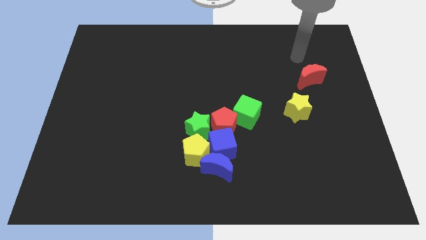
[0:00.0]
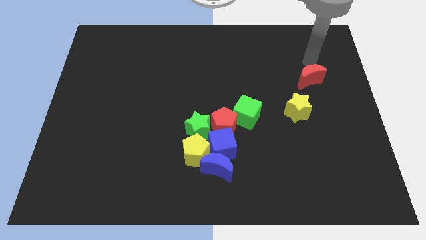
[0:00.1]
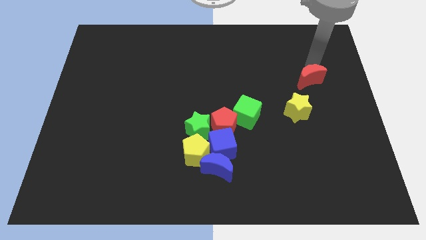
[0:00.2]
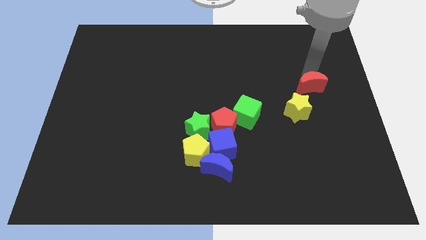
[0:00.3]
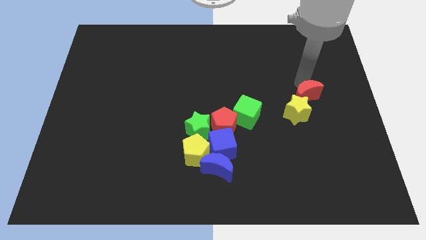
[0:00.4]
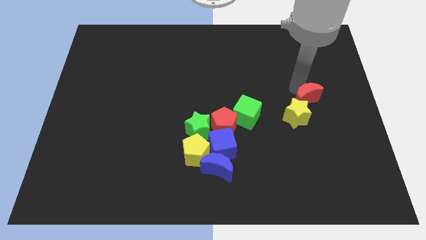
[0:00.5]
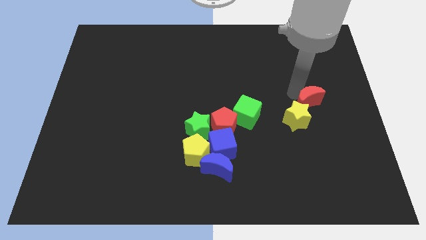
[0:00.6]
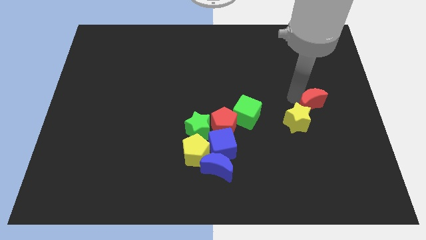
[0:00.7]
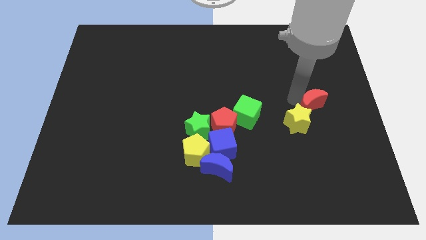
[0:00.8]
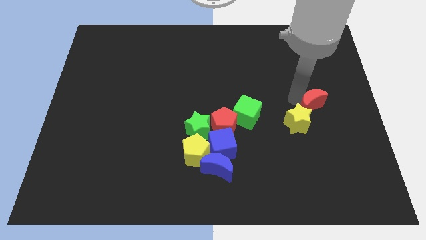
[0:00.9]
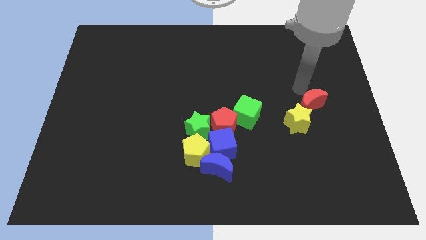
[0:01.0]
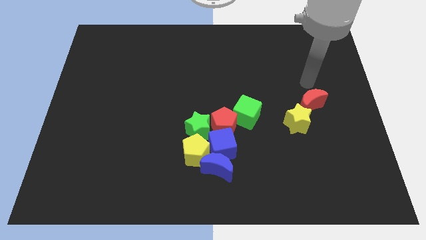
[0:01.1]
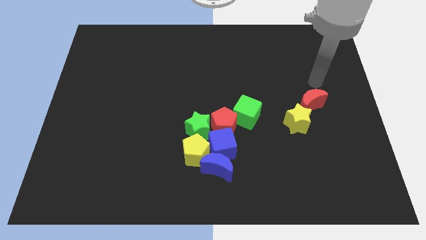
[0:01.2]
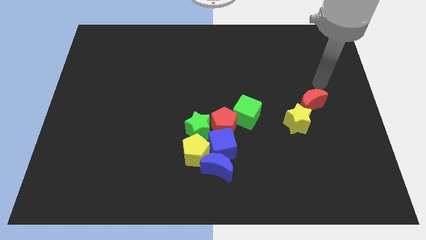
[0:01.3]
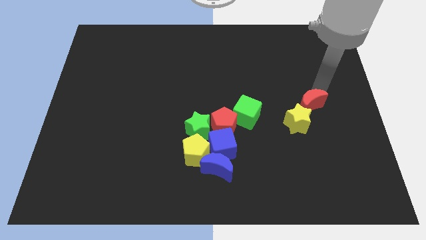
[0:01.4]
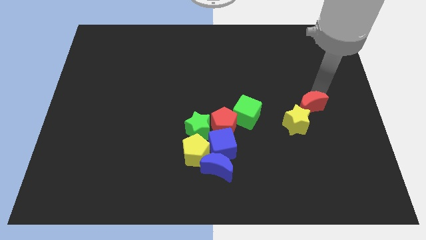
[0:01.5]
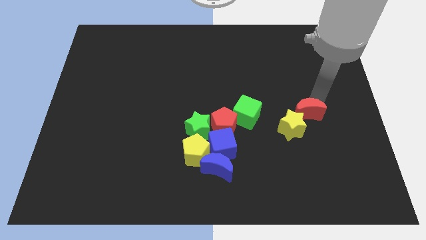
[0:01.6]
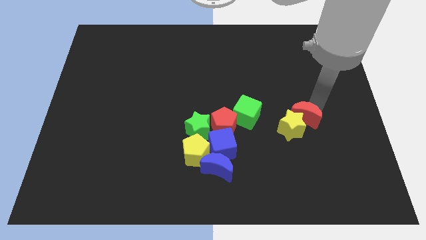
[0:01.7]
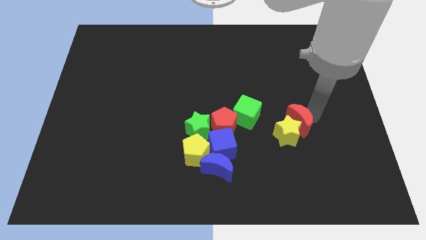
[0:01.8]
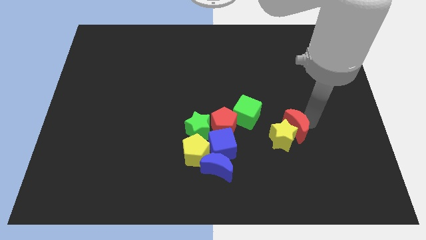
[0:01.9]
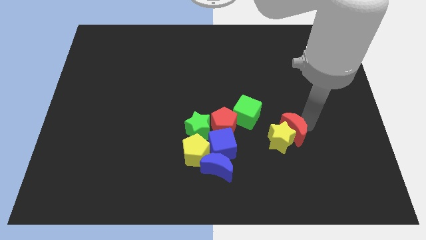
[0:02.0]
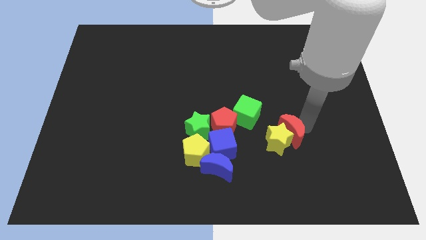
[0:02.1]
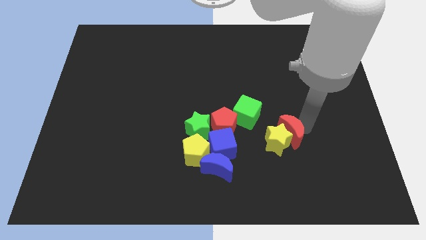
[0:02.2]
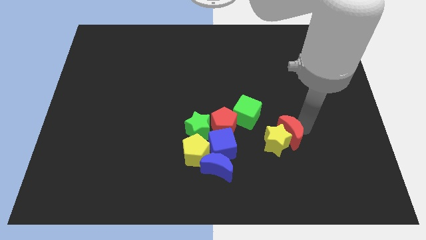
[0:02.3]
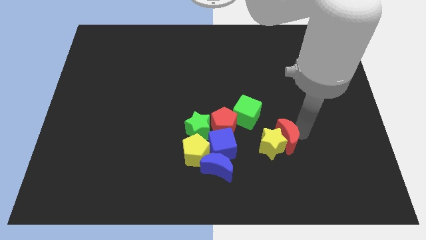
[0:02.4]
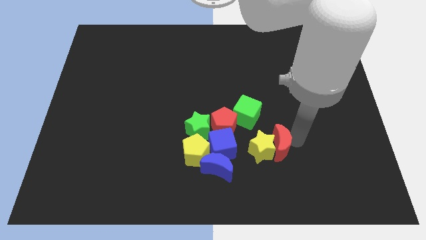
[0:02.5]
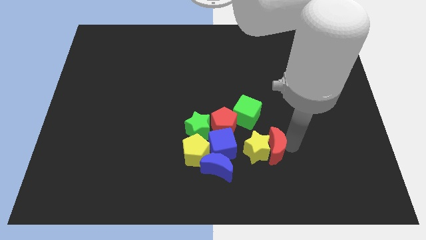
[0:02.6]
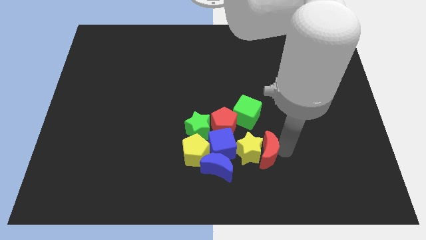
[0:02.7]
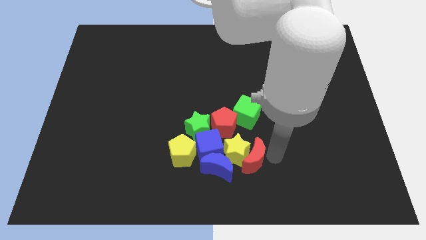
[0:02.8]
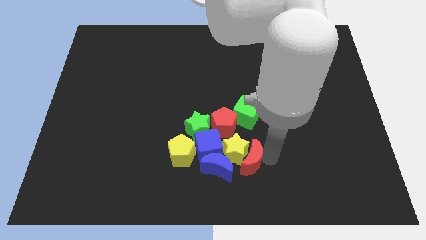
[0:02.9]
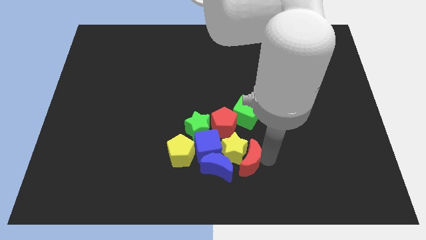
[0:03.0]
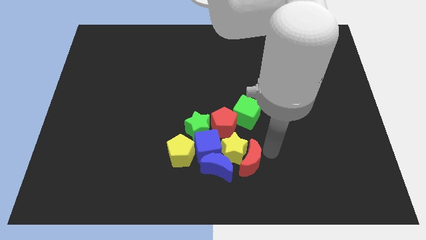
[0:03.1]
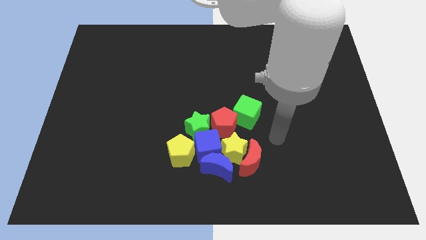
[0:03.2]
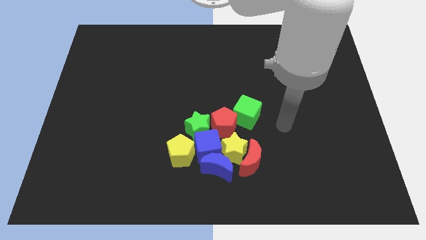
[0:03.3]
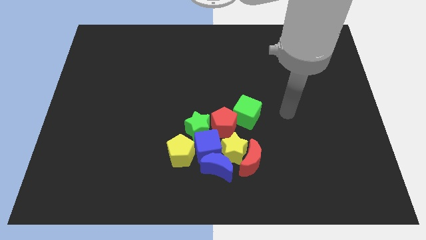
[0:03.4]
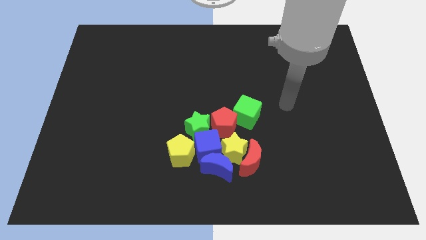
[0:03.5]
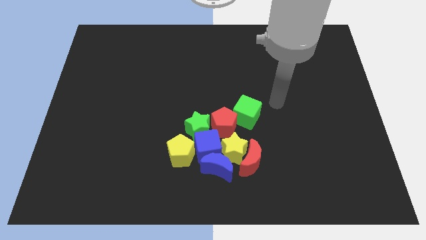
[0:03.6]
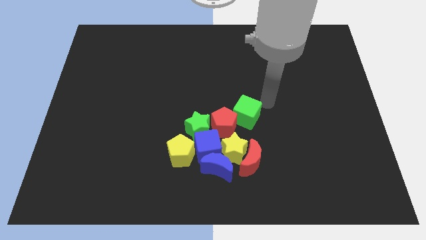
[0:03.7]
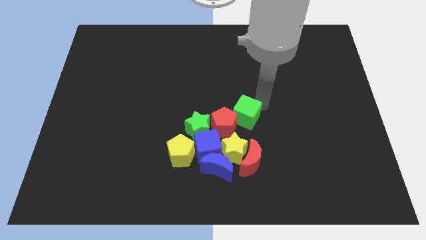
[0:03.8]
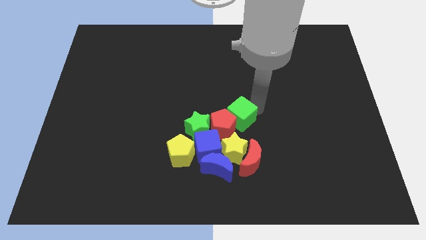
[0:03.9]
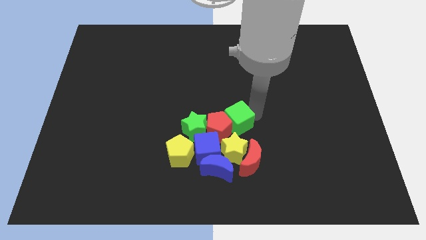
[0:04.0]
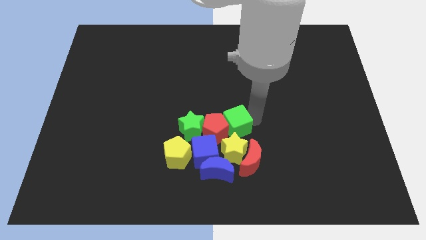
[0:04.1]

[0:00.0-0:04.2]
move the yellow star into the blue cube

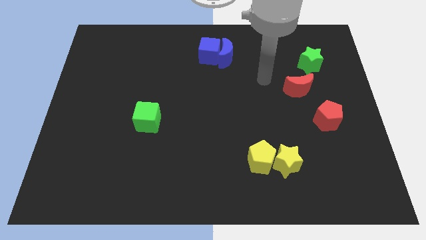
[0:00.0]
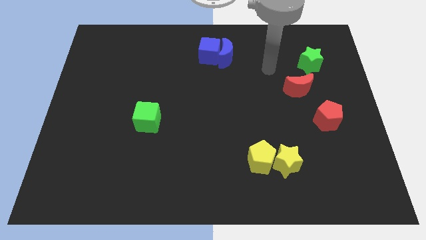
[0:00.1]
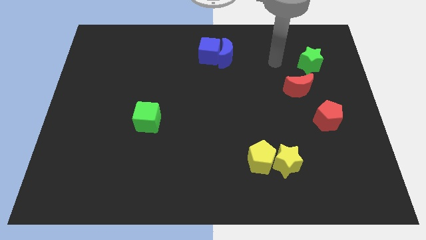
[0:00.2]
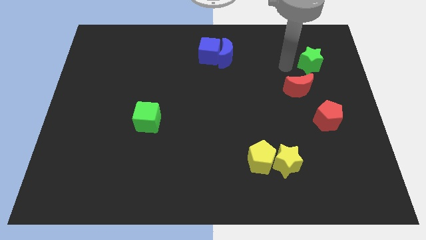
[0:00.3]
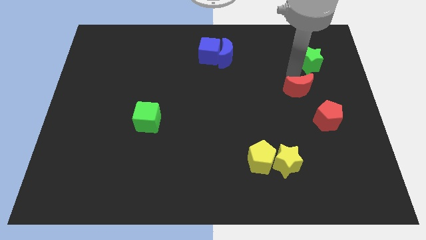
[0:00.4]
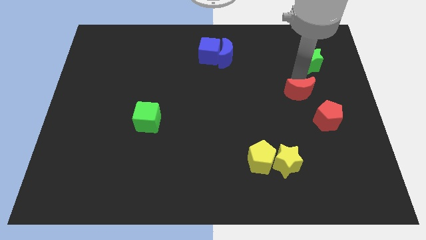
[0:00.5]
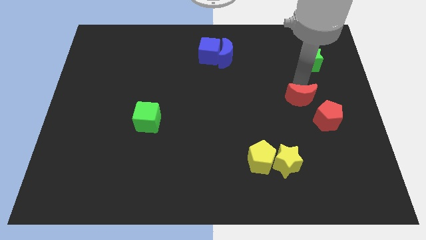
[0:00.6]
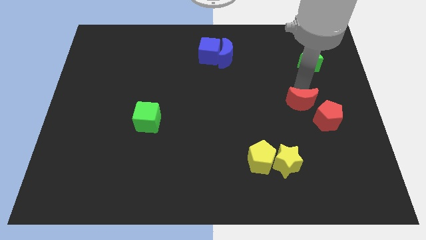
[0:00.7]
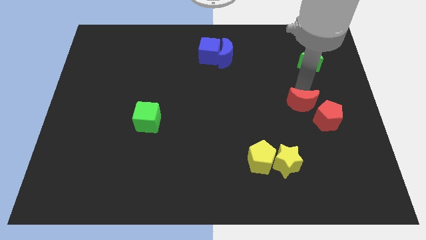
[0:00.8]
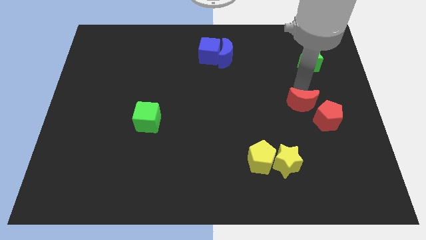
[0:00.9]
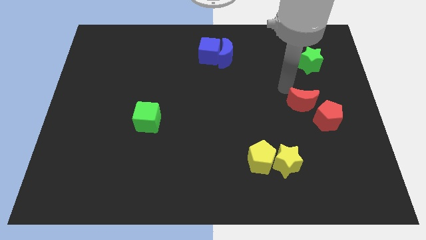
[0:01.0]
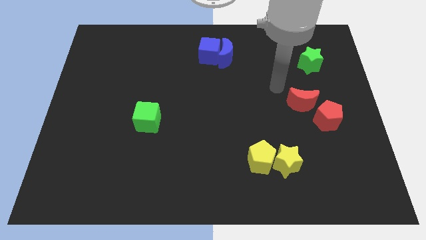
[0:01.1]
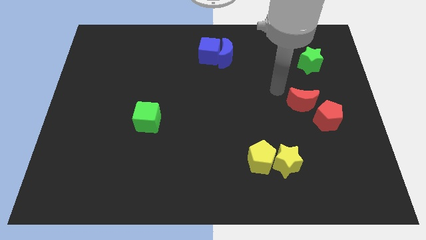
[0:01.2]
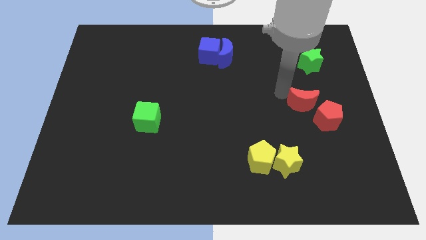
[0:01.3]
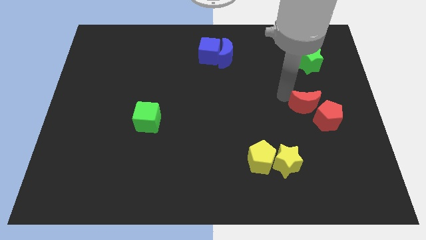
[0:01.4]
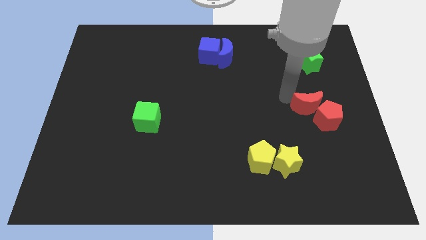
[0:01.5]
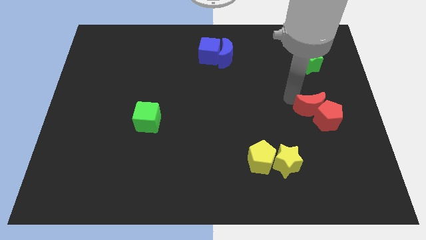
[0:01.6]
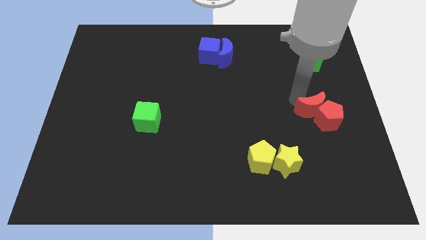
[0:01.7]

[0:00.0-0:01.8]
push the red crescent diagonally to the top left of the red pentagon

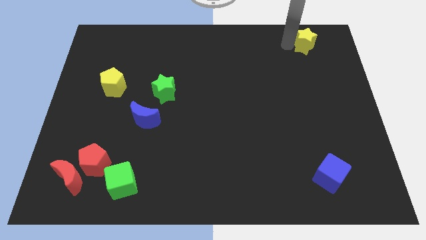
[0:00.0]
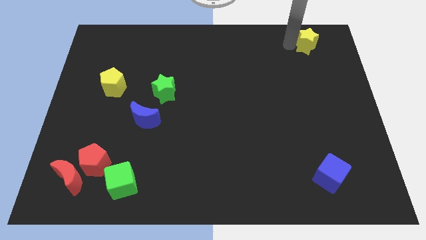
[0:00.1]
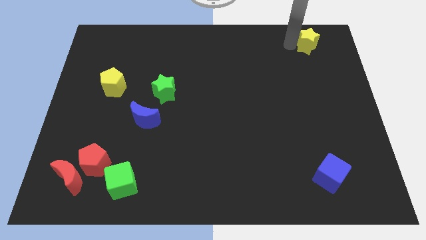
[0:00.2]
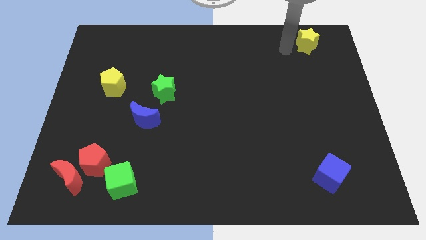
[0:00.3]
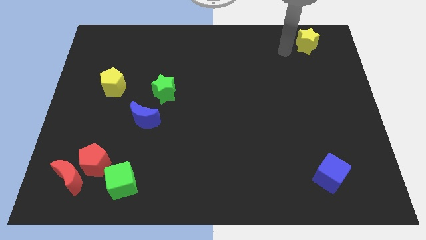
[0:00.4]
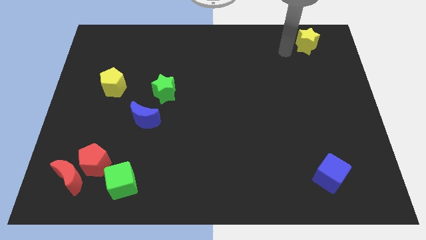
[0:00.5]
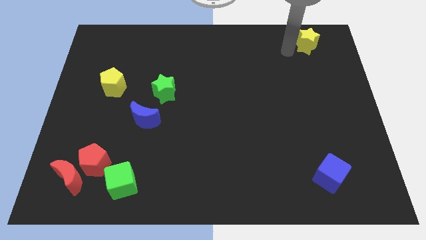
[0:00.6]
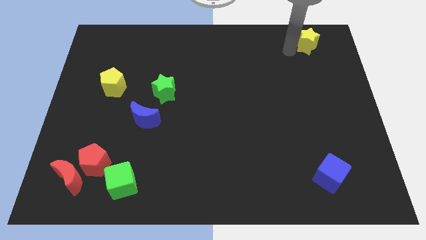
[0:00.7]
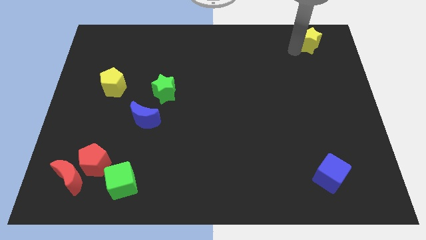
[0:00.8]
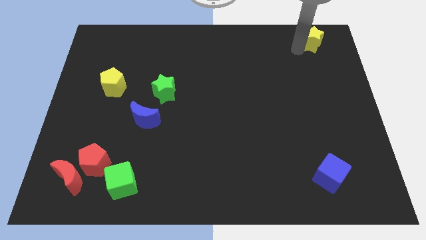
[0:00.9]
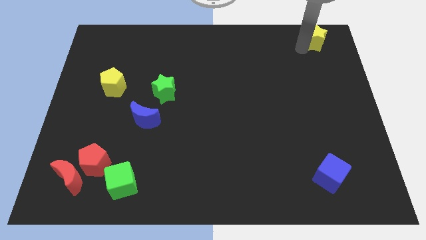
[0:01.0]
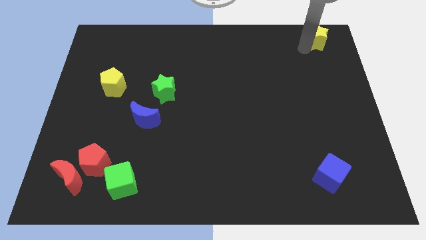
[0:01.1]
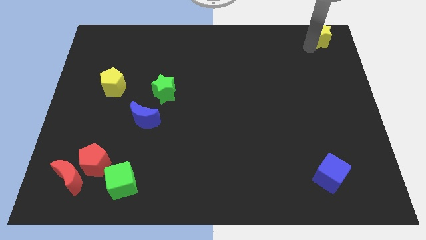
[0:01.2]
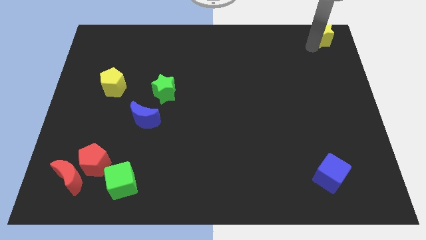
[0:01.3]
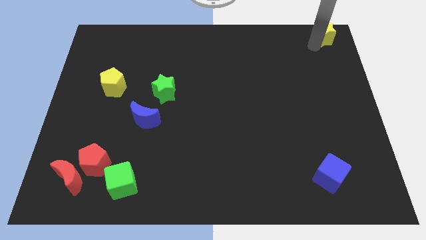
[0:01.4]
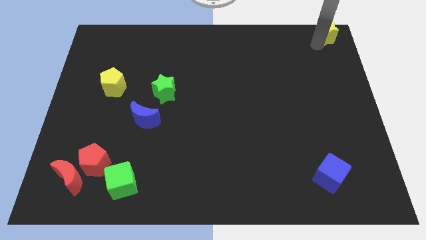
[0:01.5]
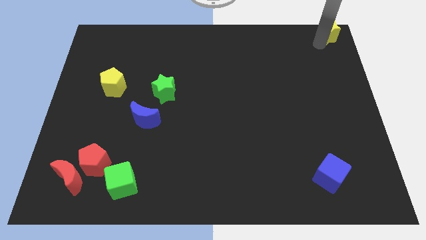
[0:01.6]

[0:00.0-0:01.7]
place the yellow star at the top right corner

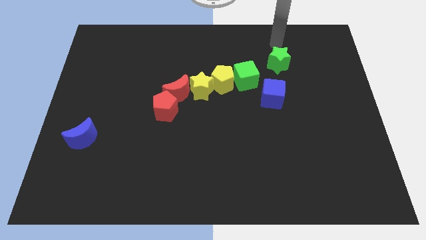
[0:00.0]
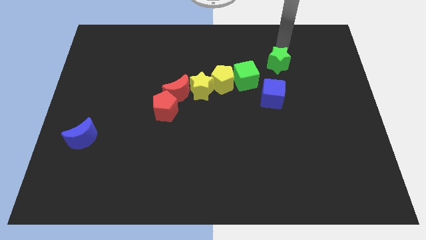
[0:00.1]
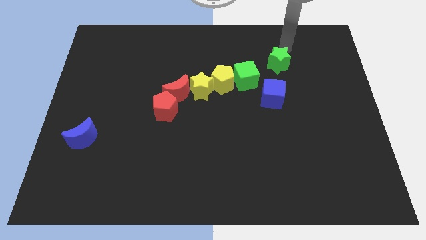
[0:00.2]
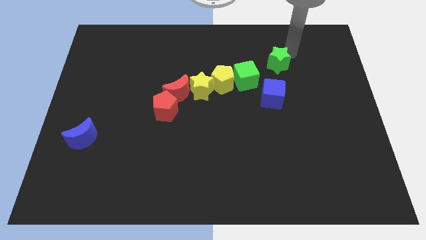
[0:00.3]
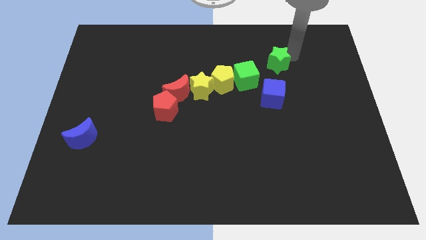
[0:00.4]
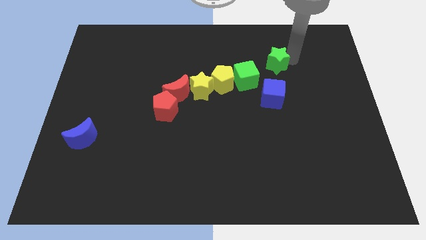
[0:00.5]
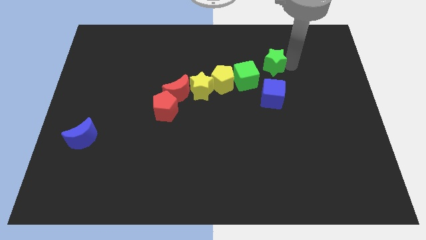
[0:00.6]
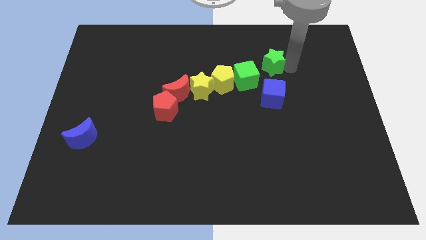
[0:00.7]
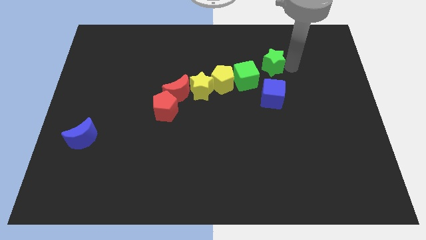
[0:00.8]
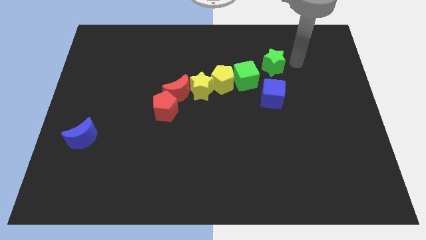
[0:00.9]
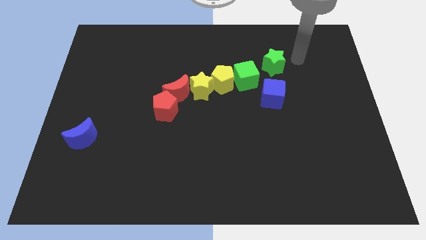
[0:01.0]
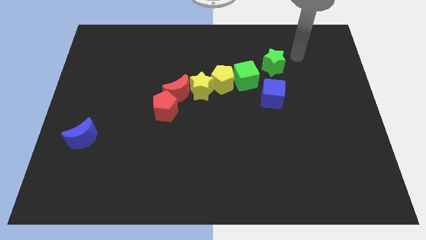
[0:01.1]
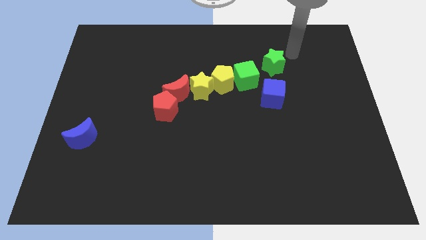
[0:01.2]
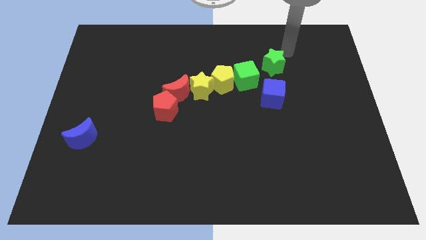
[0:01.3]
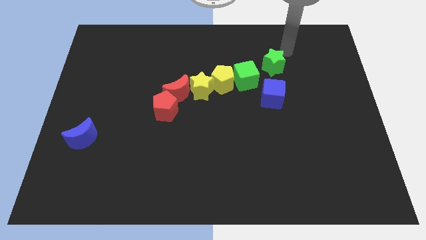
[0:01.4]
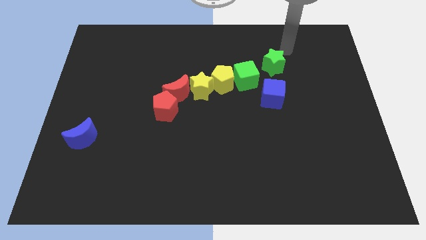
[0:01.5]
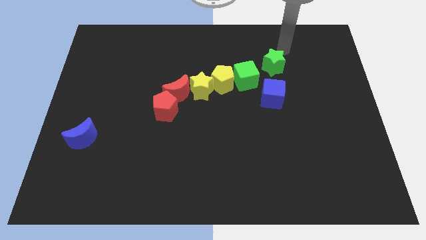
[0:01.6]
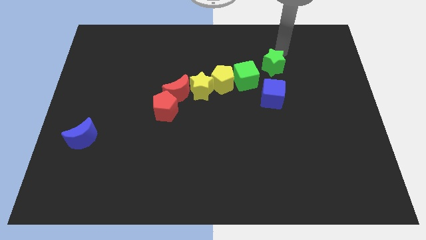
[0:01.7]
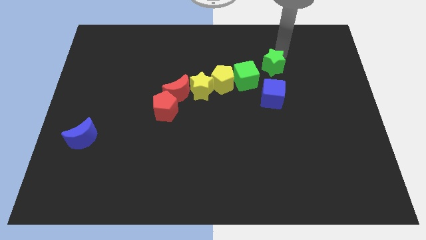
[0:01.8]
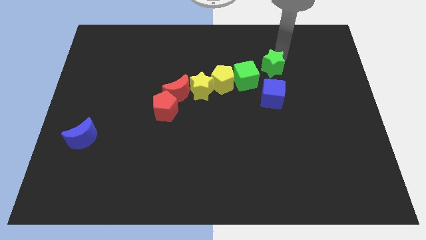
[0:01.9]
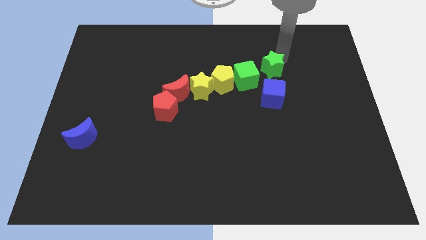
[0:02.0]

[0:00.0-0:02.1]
slightly move green star
